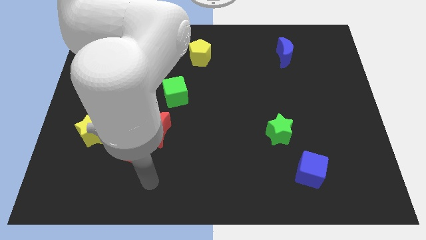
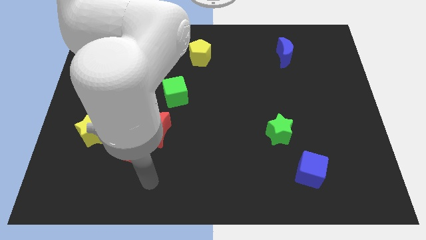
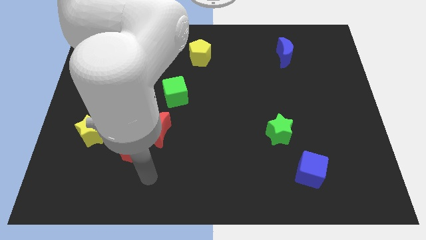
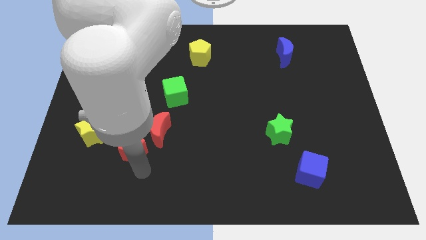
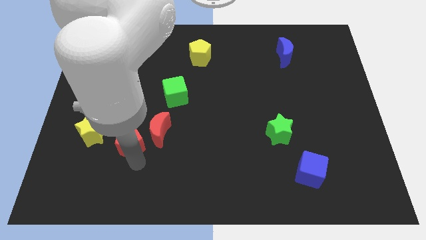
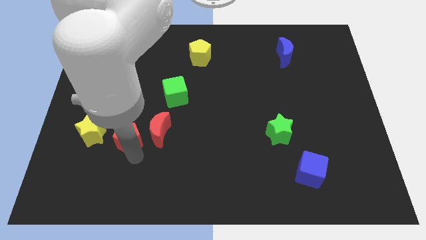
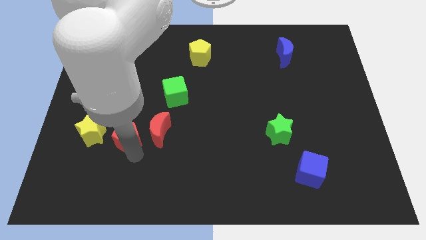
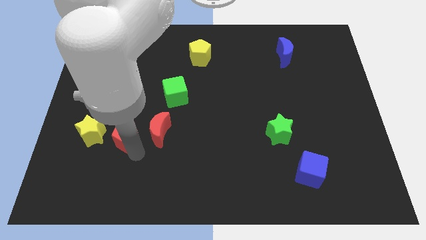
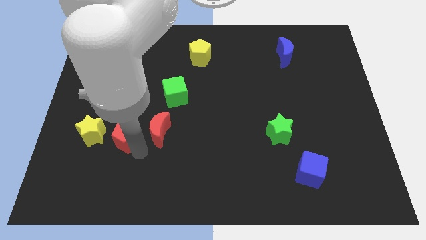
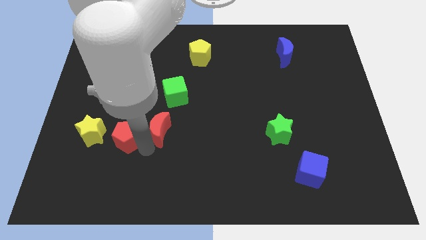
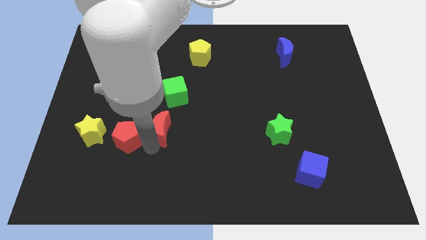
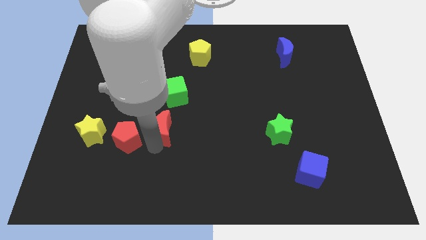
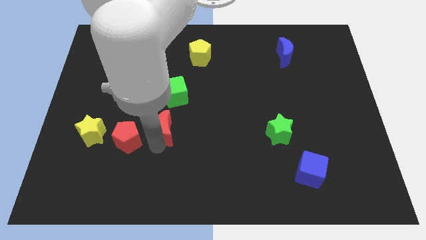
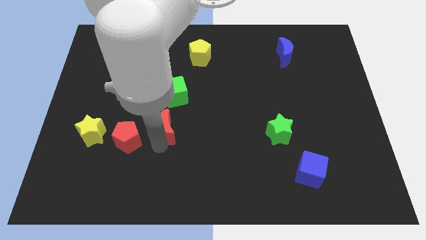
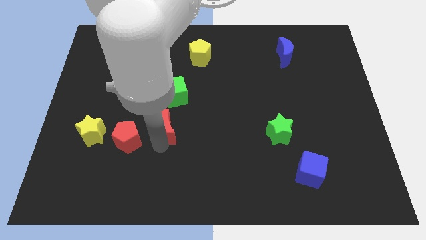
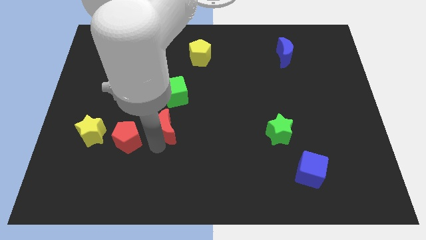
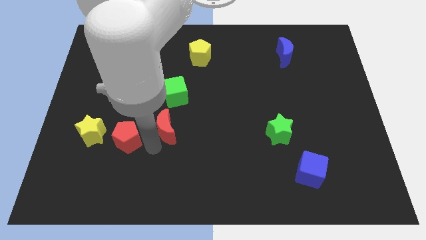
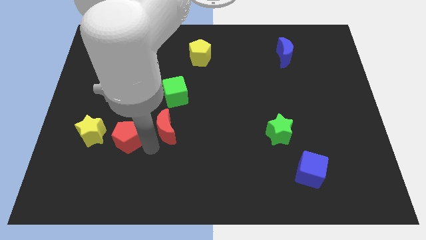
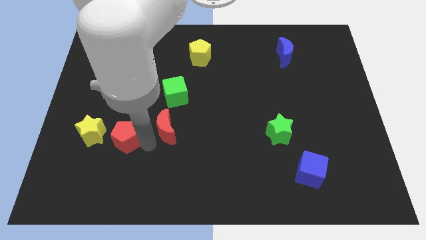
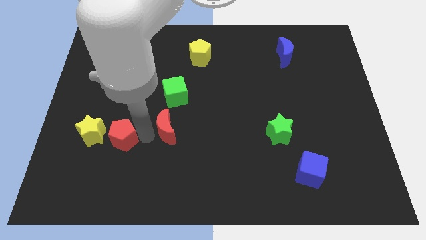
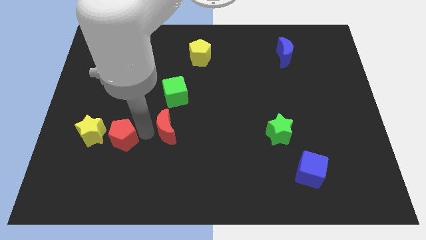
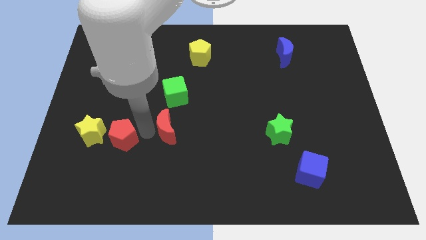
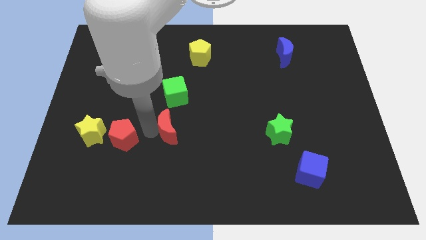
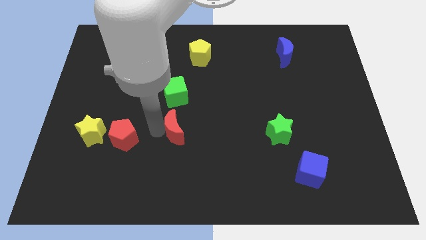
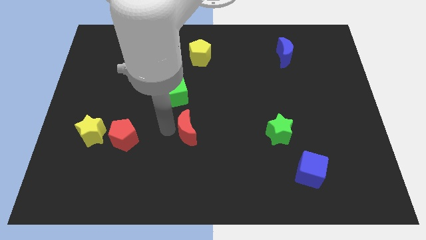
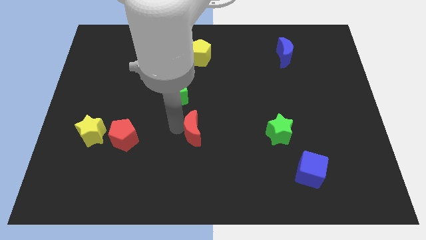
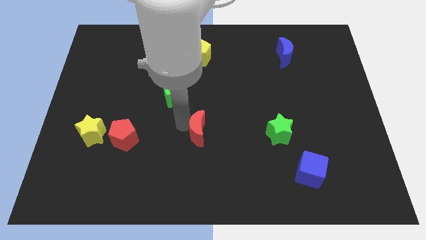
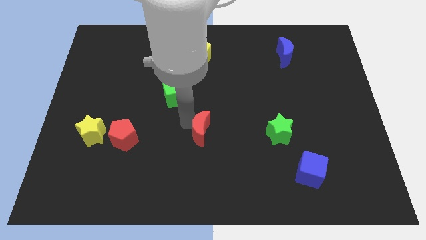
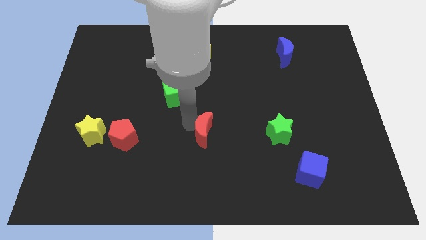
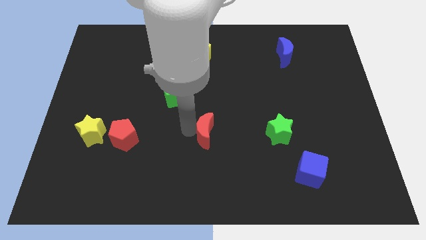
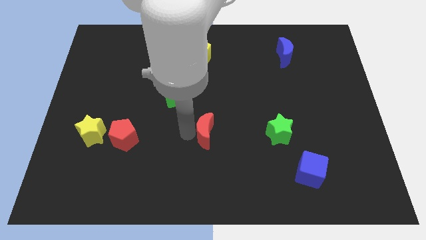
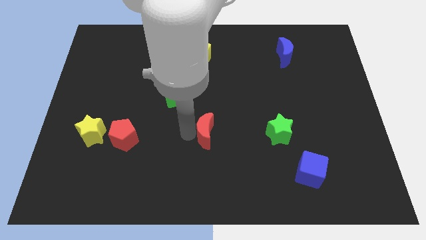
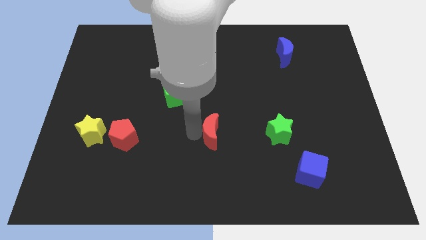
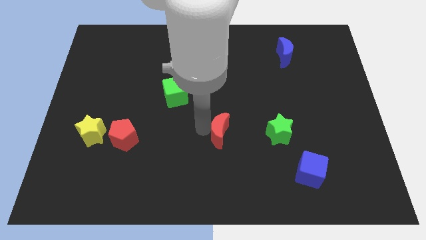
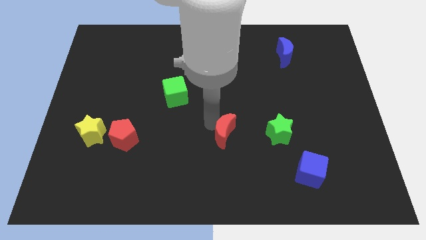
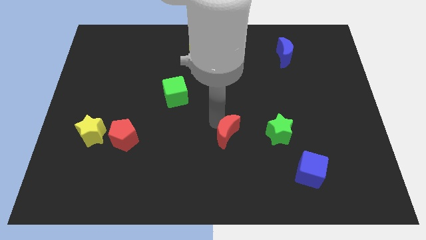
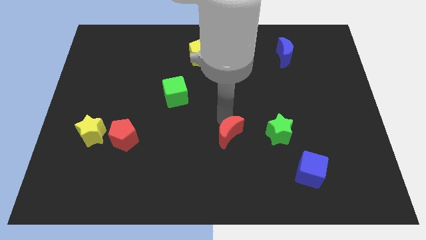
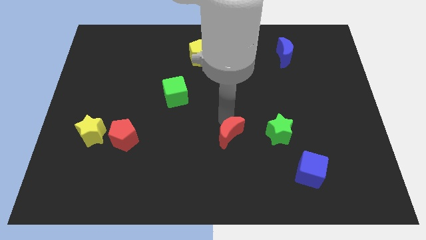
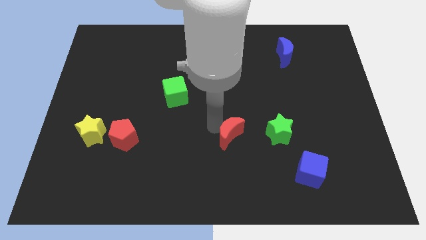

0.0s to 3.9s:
push the red crescent to the left of the green star

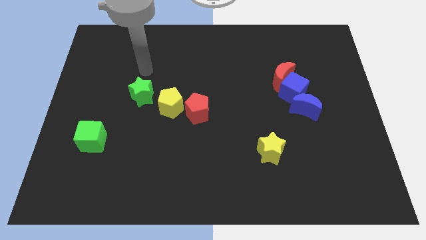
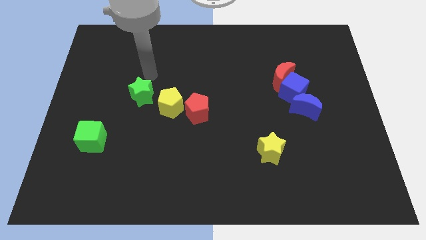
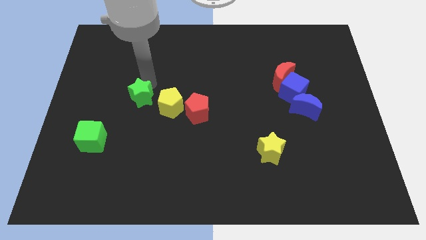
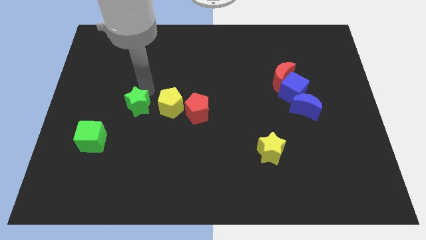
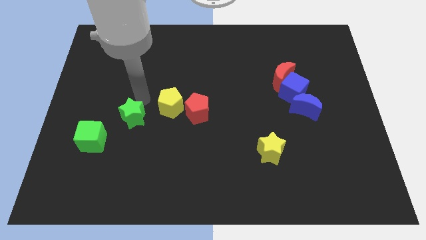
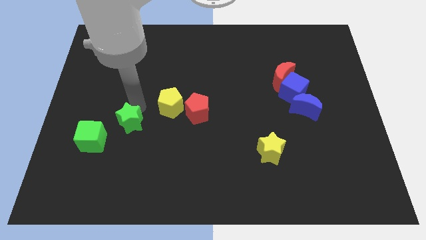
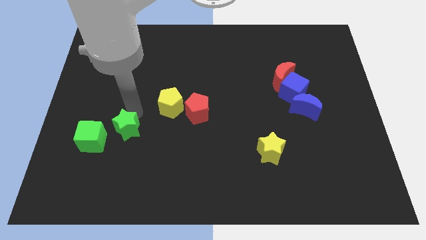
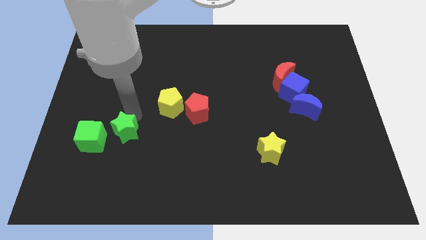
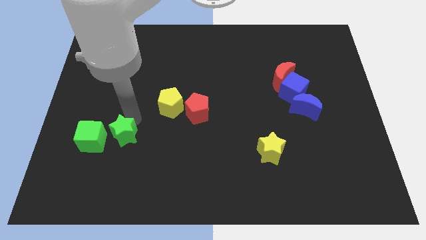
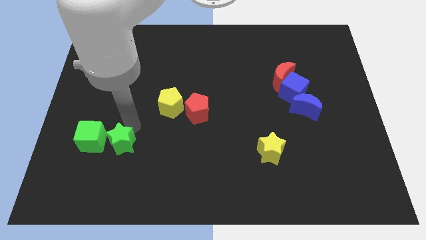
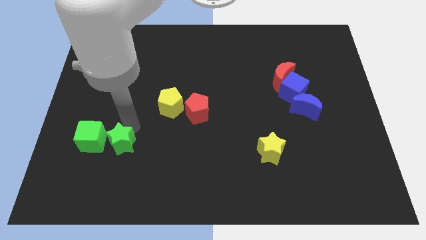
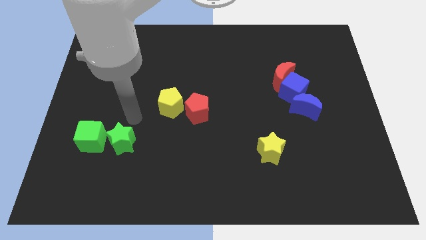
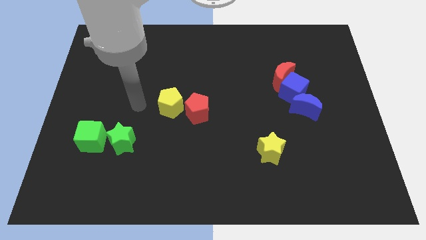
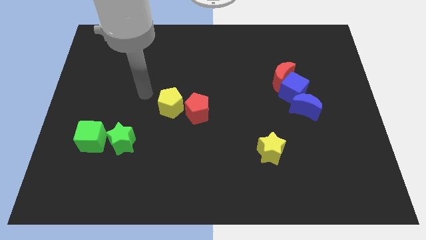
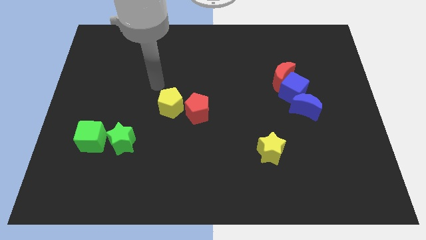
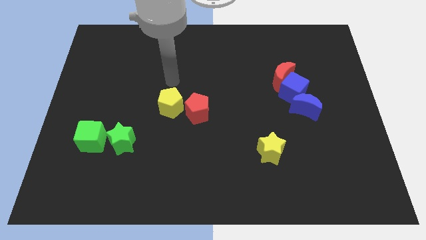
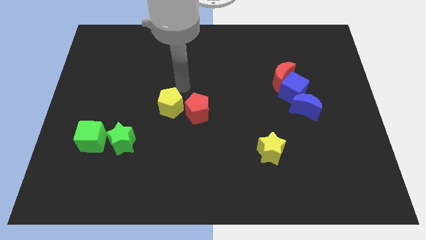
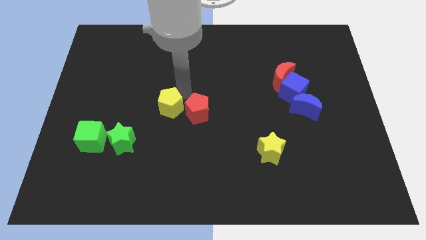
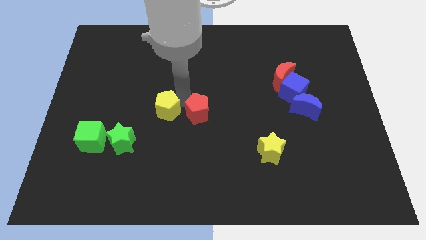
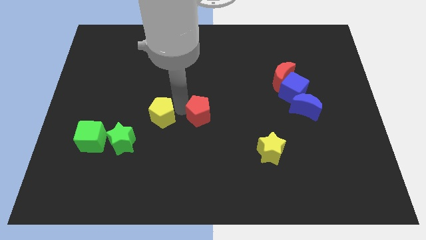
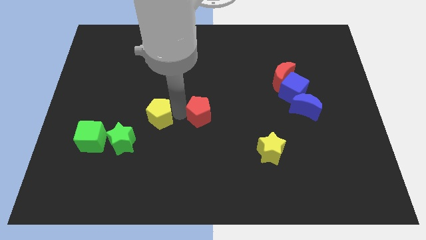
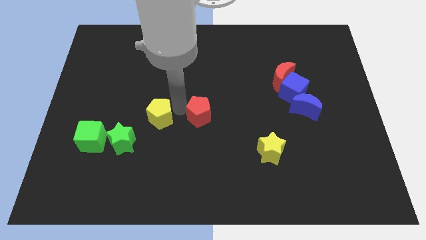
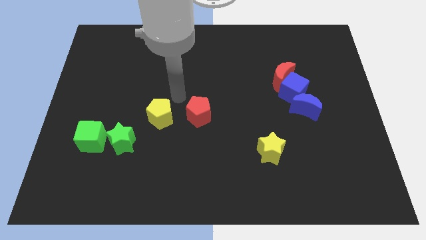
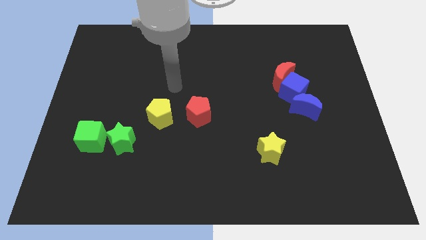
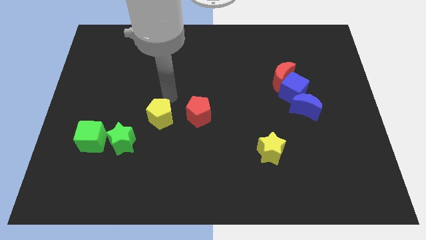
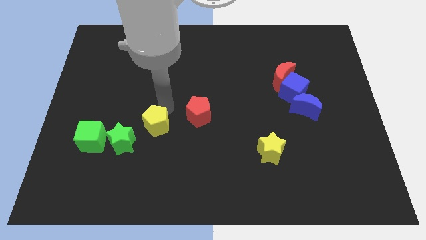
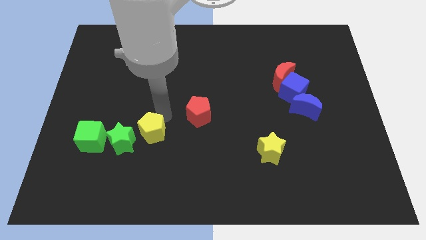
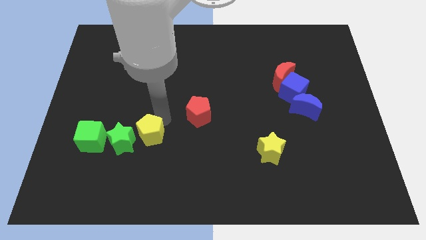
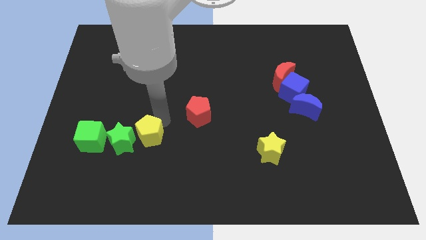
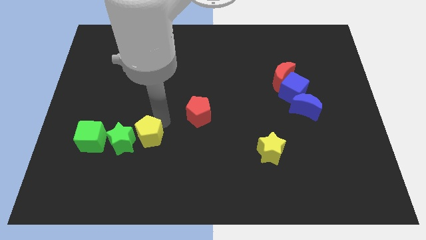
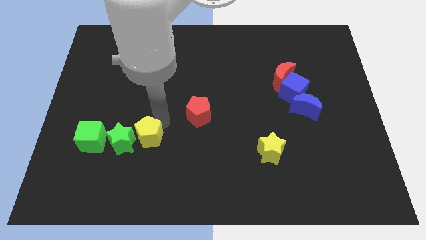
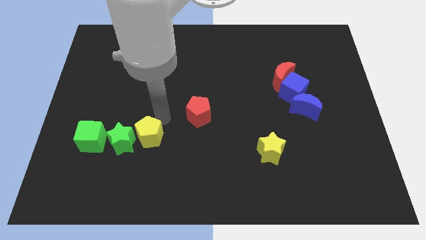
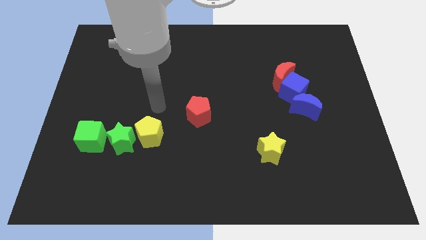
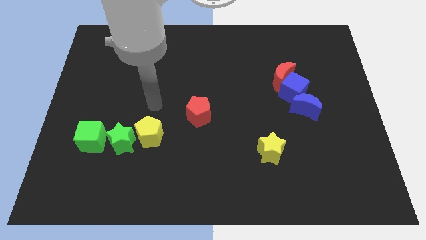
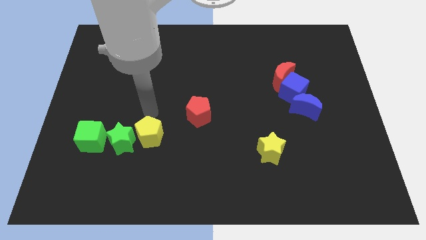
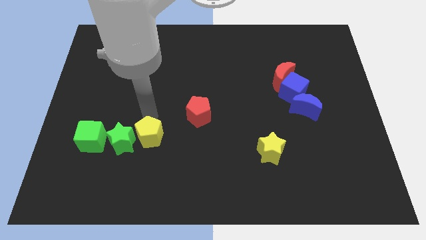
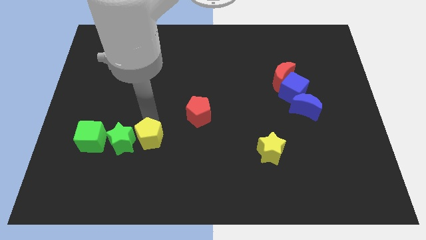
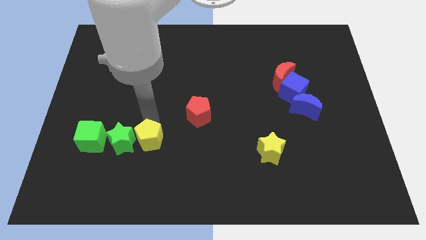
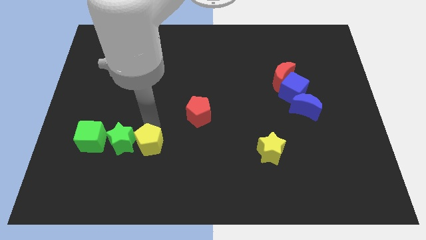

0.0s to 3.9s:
place the green star and yellow pentagon to the right of the green cube

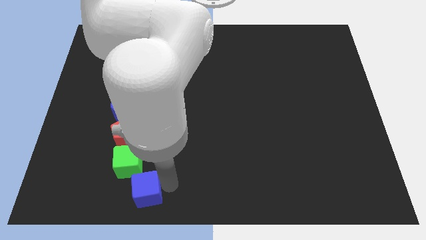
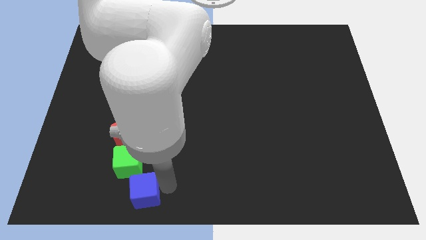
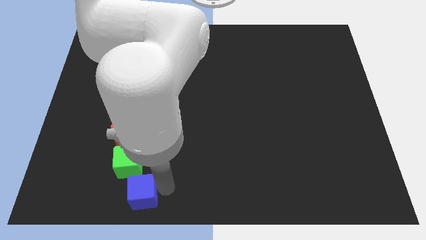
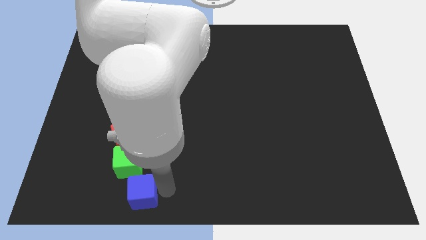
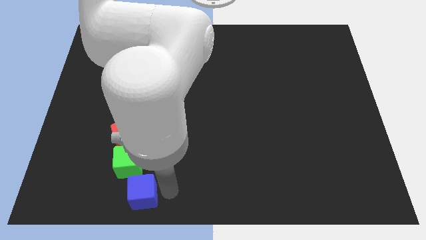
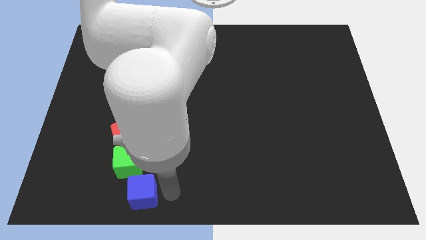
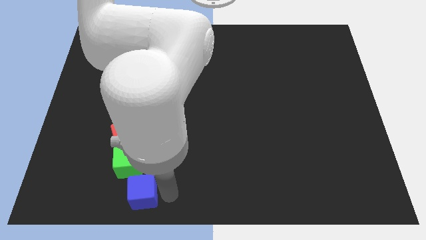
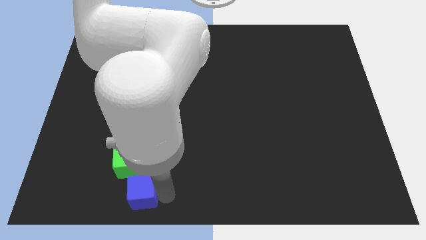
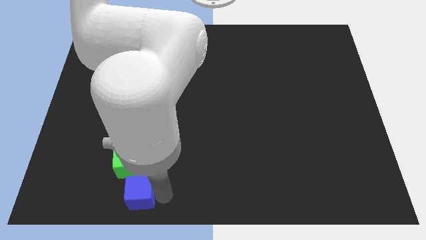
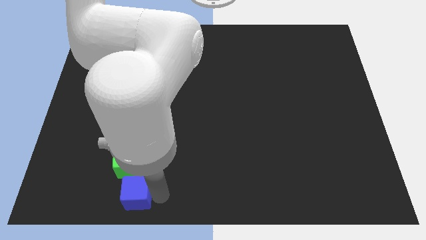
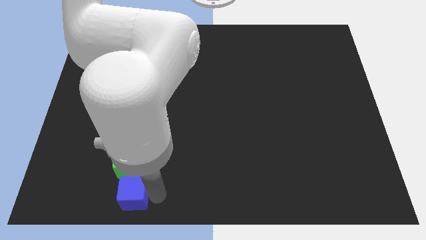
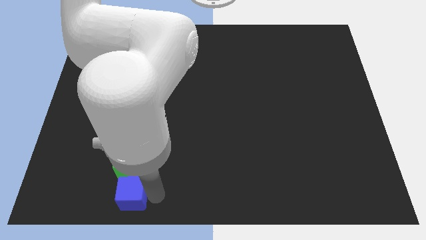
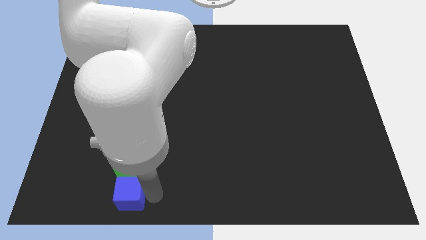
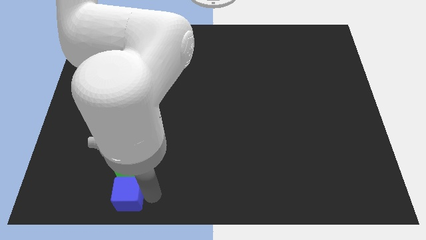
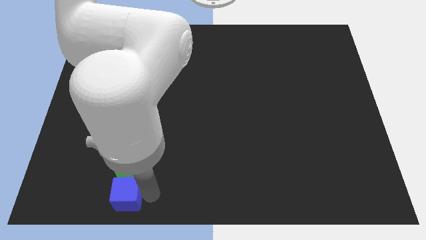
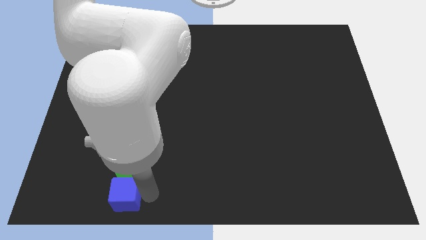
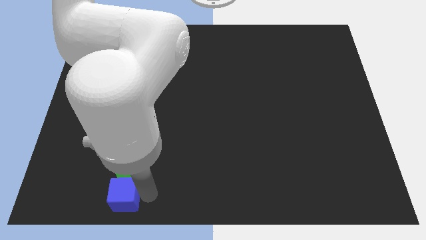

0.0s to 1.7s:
move the blue cube to the bottom left of the board
